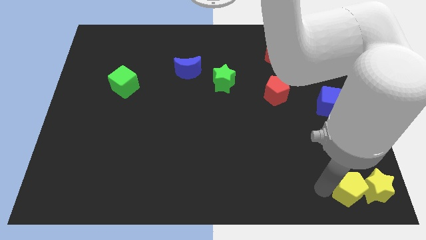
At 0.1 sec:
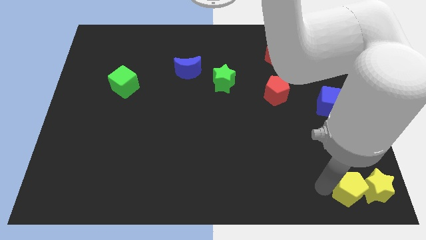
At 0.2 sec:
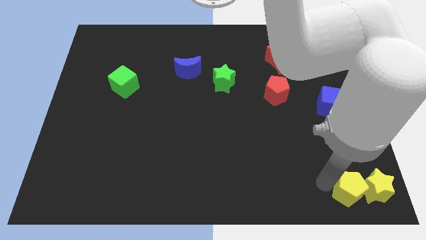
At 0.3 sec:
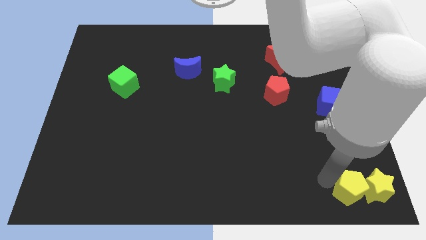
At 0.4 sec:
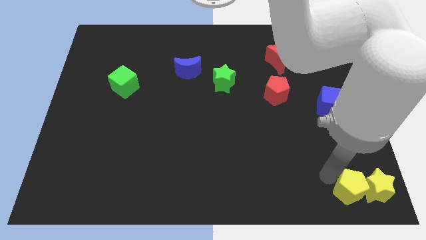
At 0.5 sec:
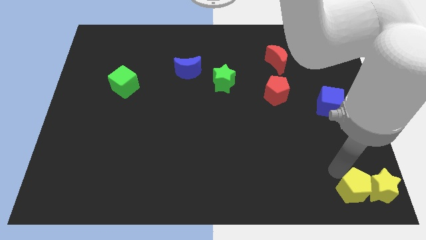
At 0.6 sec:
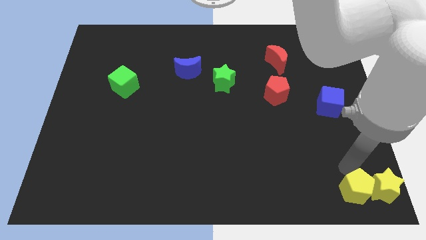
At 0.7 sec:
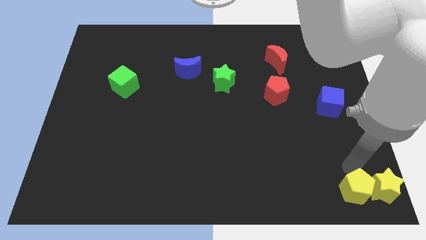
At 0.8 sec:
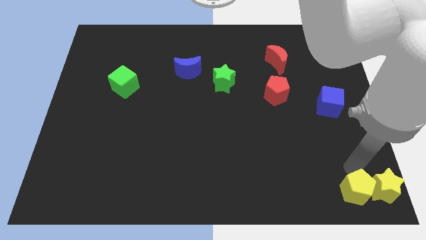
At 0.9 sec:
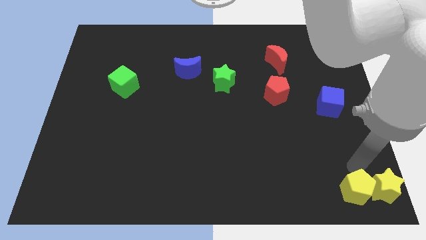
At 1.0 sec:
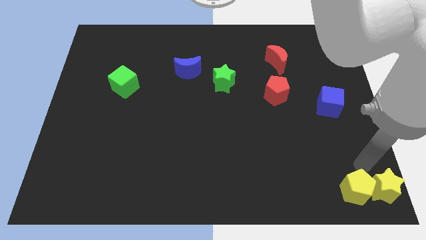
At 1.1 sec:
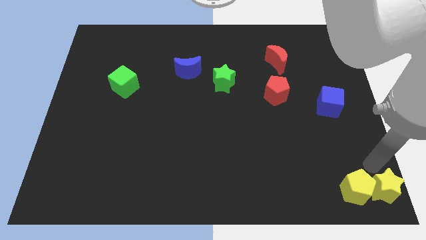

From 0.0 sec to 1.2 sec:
push the yellow pentagon along with the yellow star

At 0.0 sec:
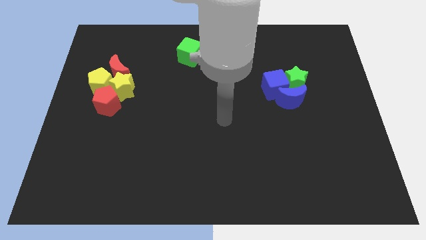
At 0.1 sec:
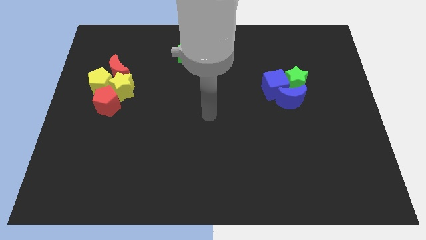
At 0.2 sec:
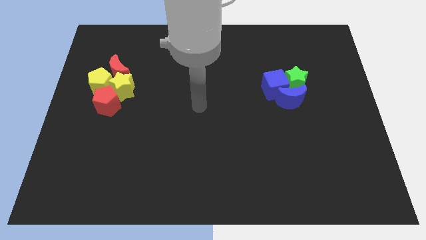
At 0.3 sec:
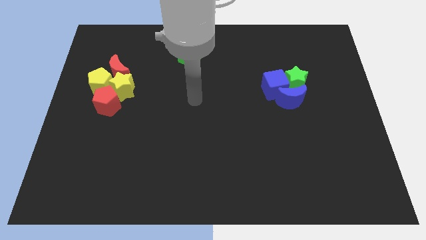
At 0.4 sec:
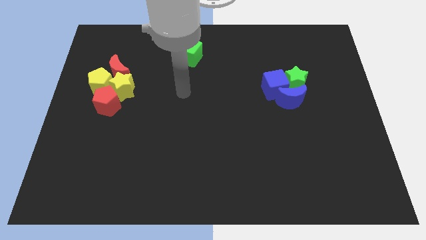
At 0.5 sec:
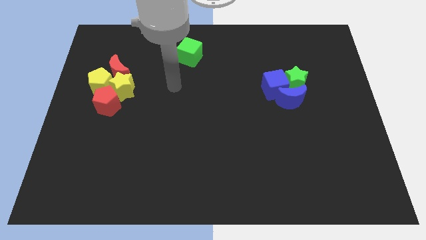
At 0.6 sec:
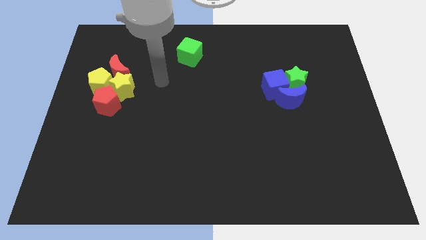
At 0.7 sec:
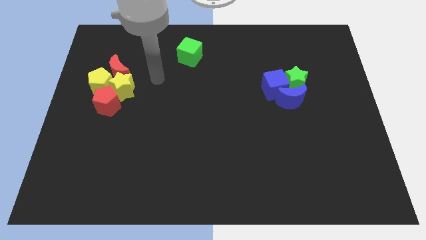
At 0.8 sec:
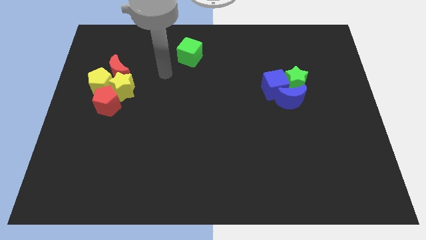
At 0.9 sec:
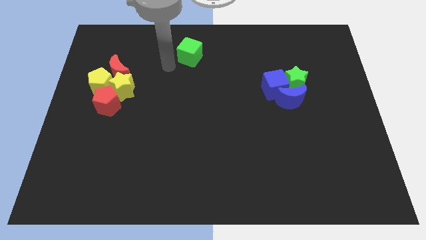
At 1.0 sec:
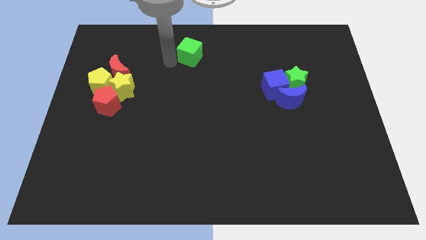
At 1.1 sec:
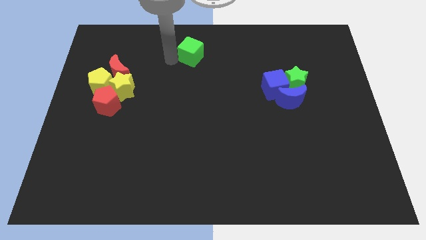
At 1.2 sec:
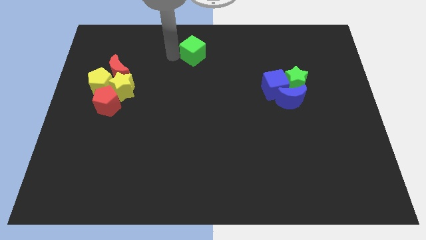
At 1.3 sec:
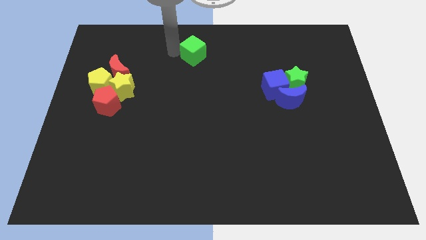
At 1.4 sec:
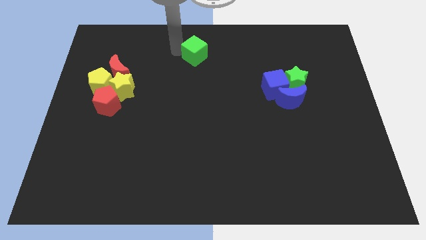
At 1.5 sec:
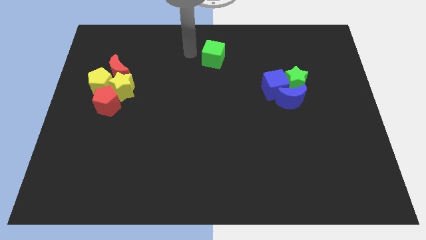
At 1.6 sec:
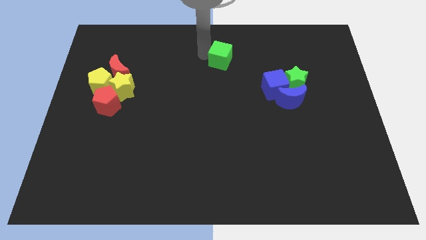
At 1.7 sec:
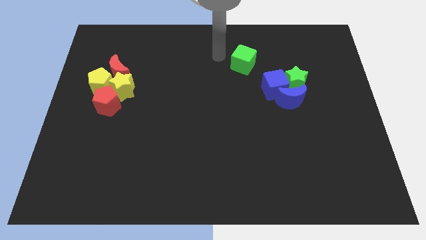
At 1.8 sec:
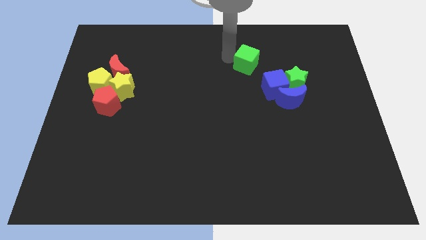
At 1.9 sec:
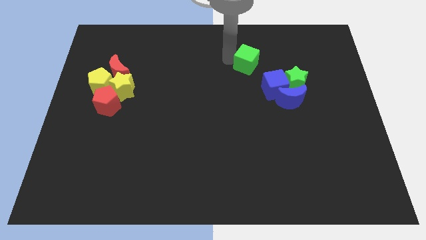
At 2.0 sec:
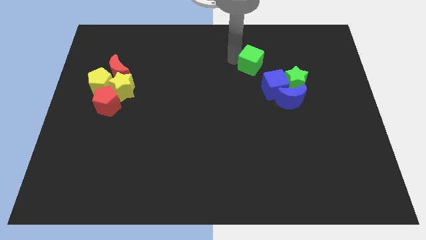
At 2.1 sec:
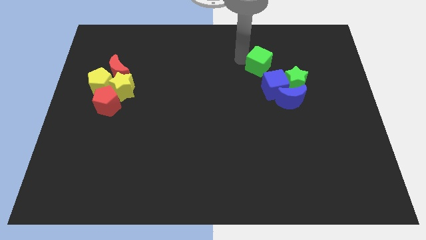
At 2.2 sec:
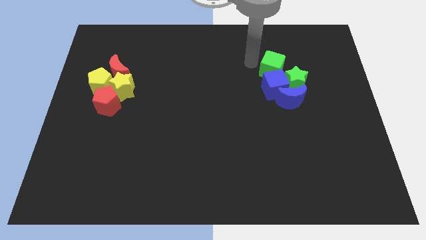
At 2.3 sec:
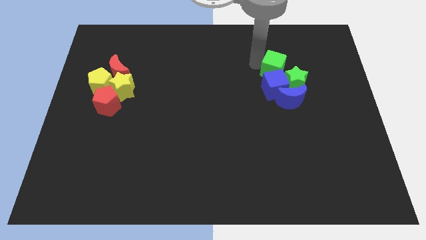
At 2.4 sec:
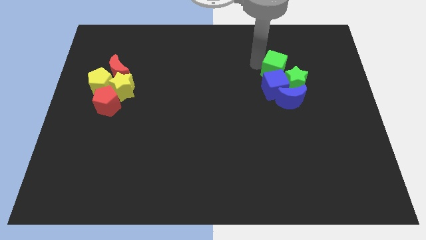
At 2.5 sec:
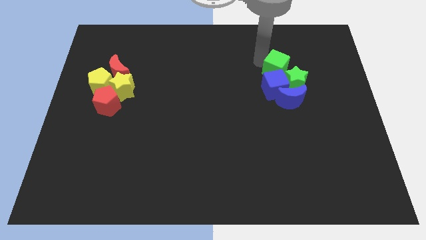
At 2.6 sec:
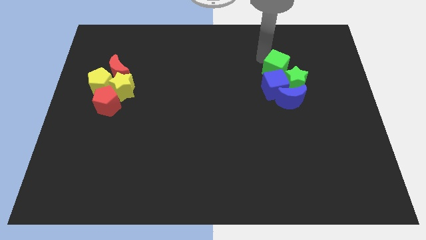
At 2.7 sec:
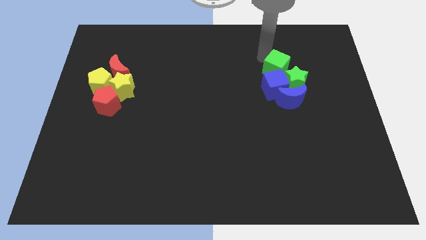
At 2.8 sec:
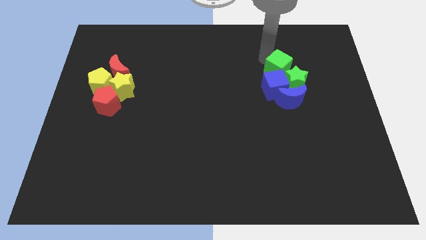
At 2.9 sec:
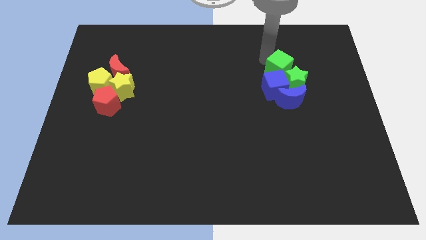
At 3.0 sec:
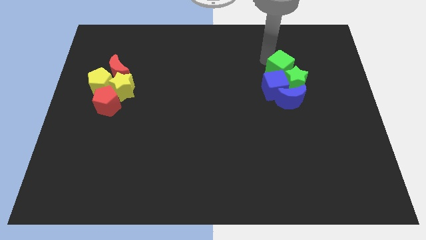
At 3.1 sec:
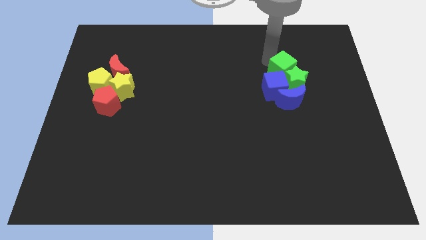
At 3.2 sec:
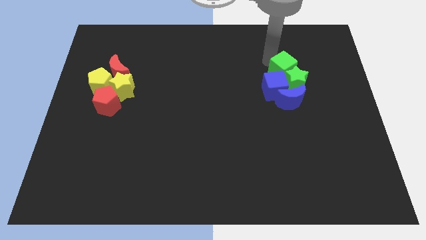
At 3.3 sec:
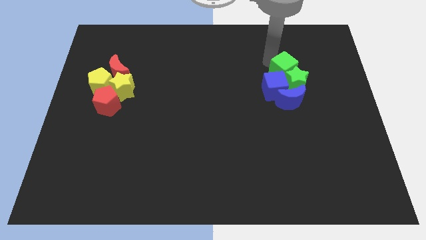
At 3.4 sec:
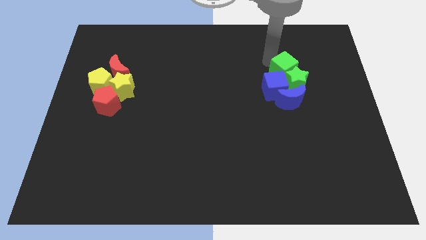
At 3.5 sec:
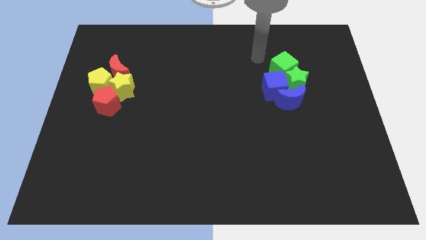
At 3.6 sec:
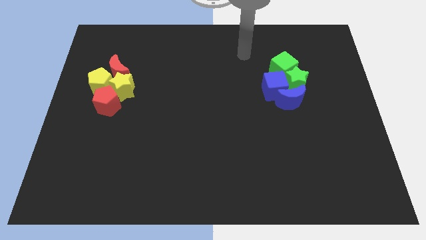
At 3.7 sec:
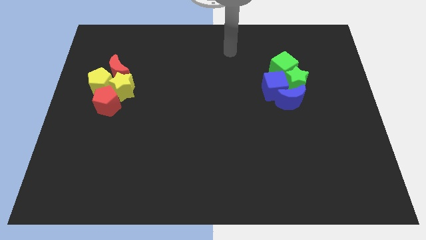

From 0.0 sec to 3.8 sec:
place the green cube to the top of the green star

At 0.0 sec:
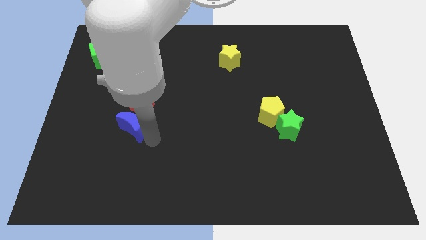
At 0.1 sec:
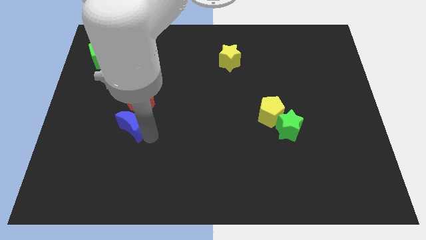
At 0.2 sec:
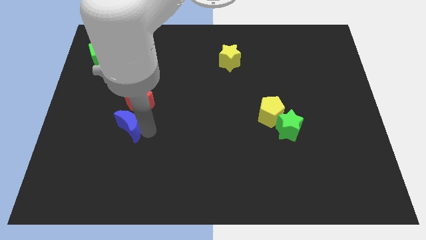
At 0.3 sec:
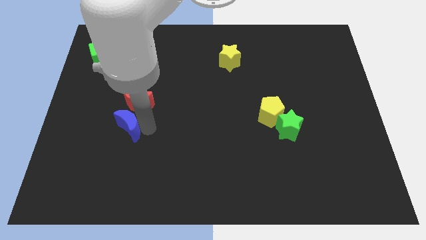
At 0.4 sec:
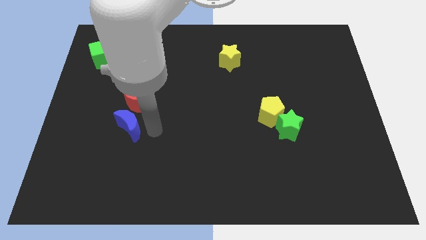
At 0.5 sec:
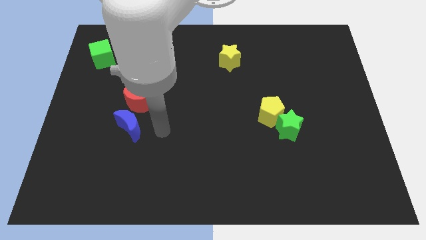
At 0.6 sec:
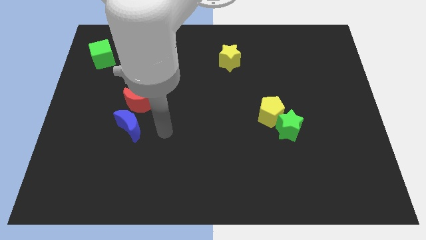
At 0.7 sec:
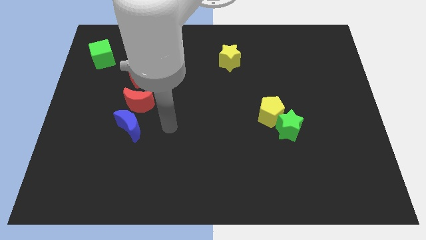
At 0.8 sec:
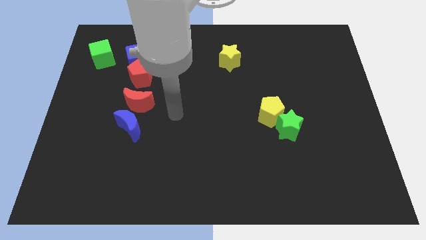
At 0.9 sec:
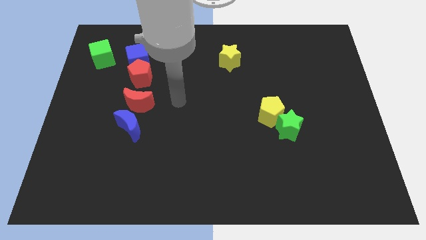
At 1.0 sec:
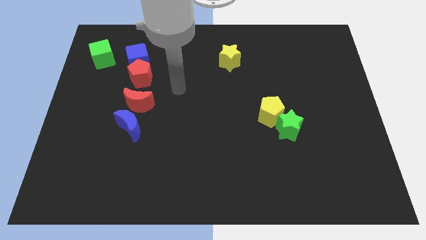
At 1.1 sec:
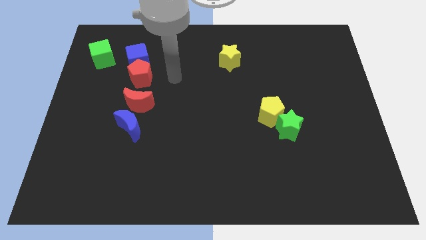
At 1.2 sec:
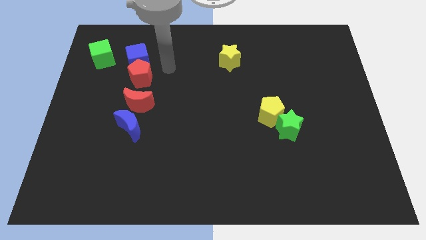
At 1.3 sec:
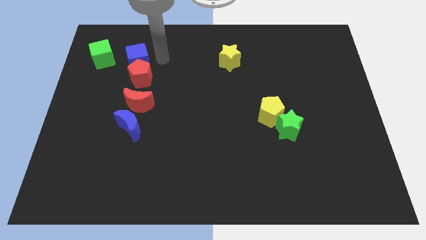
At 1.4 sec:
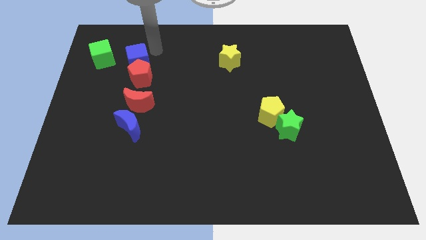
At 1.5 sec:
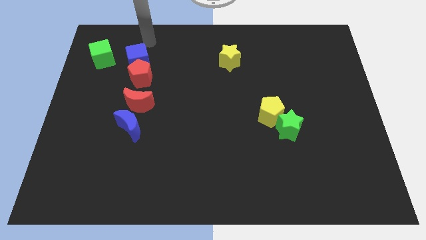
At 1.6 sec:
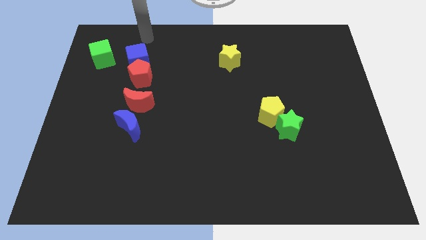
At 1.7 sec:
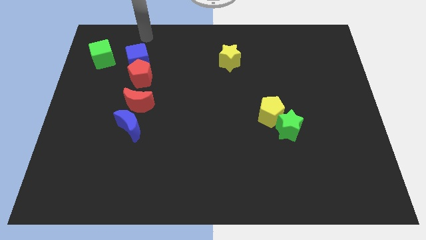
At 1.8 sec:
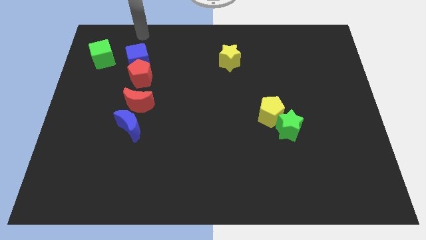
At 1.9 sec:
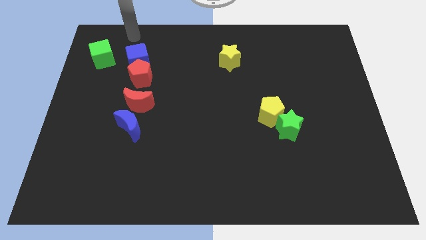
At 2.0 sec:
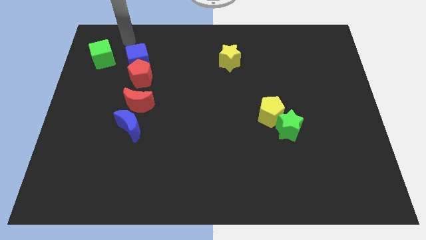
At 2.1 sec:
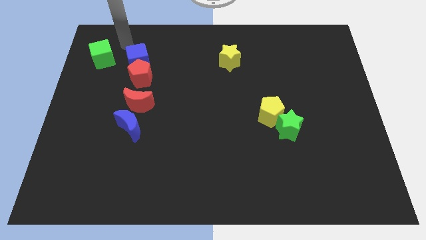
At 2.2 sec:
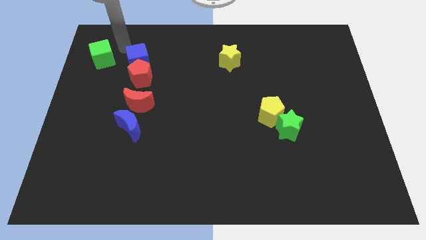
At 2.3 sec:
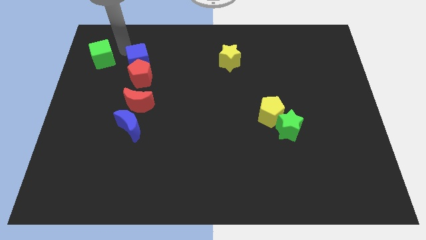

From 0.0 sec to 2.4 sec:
move the arm towards the right side of the green cube

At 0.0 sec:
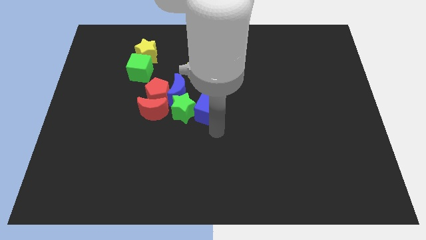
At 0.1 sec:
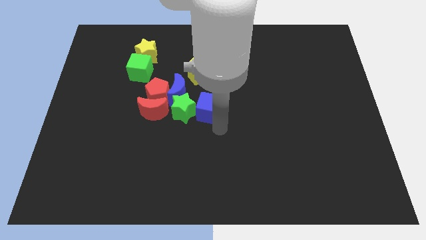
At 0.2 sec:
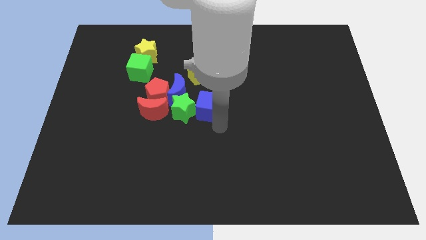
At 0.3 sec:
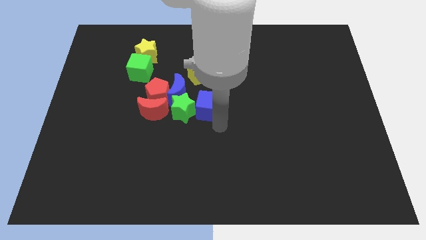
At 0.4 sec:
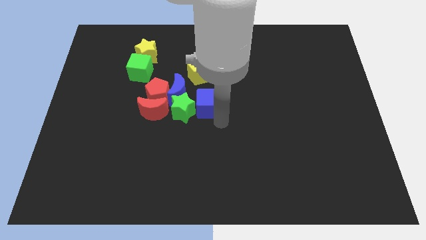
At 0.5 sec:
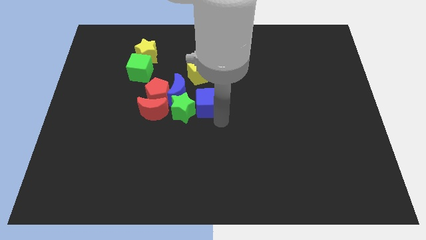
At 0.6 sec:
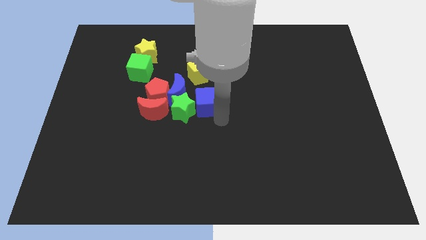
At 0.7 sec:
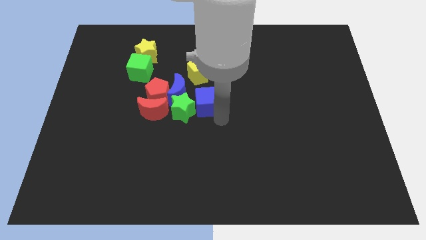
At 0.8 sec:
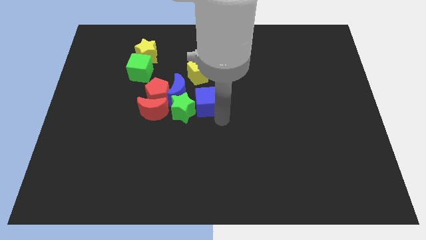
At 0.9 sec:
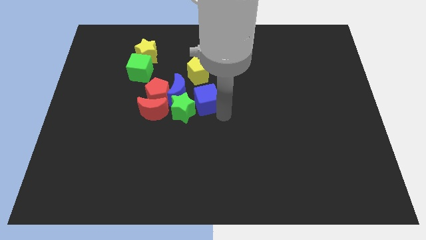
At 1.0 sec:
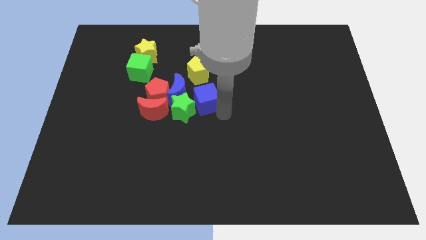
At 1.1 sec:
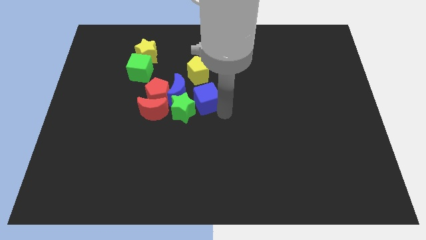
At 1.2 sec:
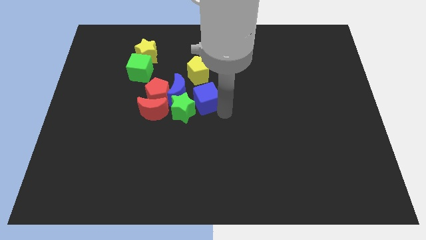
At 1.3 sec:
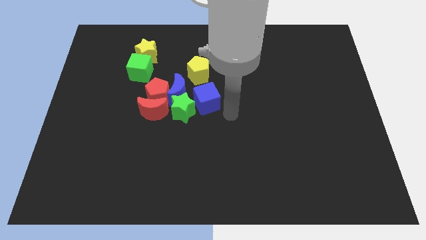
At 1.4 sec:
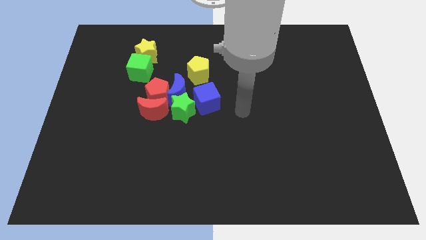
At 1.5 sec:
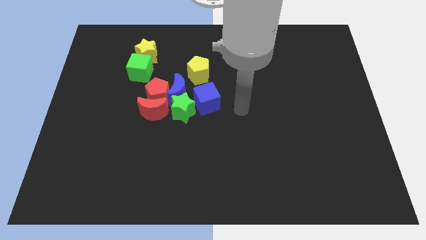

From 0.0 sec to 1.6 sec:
push the blue cube to the bottom of the yellow pentagon
